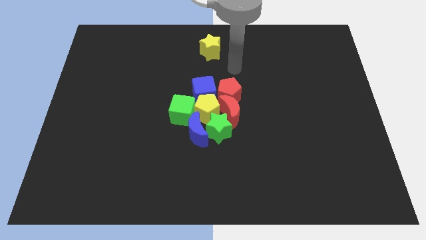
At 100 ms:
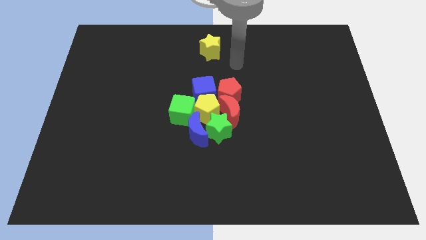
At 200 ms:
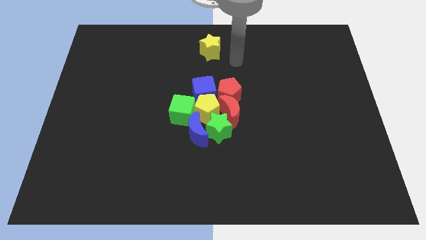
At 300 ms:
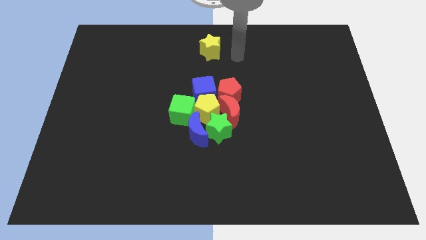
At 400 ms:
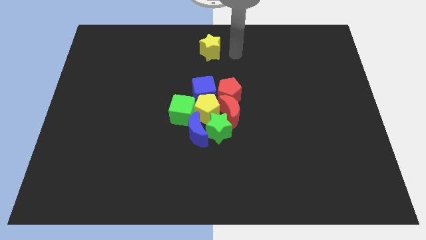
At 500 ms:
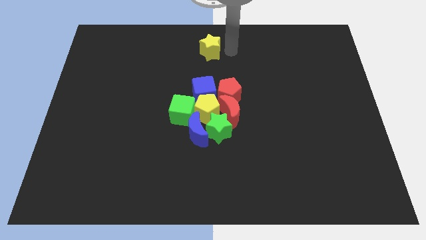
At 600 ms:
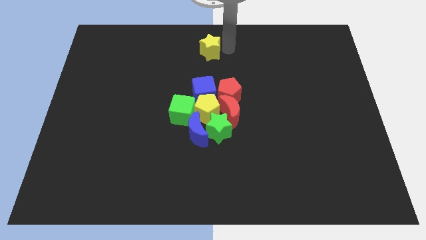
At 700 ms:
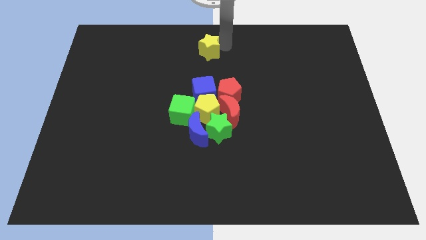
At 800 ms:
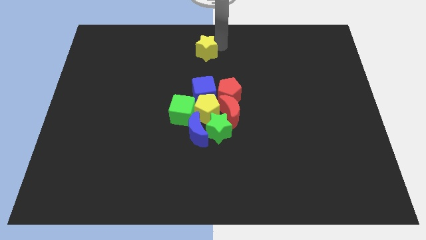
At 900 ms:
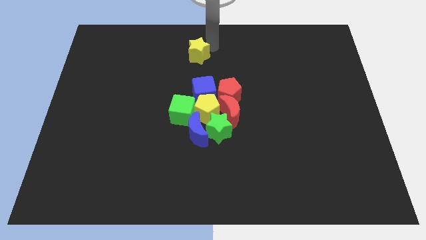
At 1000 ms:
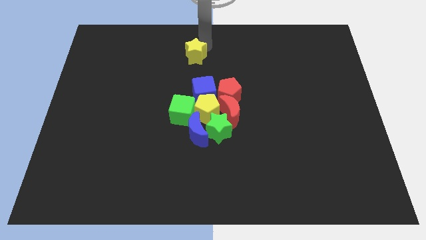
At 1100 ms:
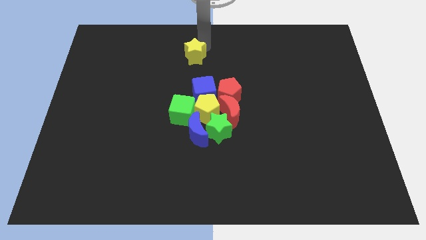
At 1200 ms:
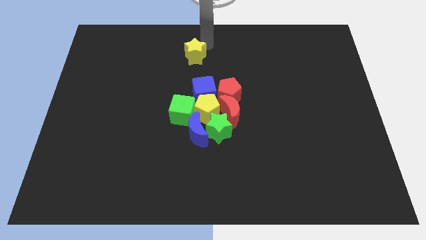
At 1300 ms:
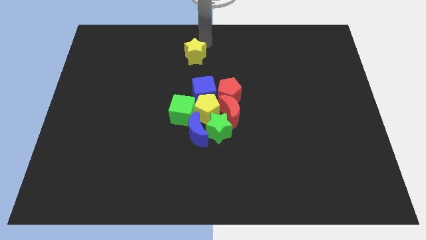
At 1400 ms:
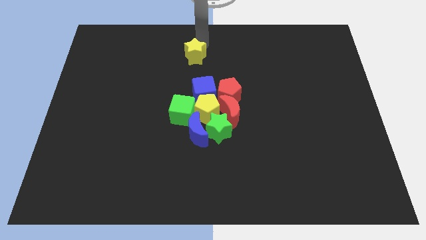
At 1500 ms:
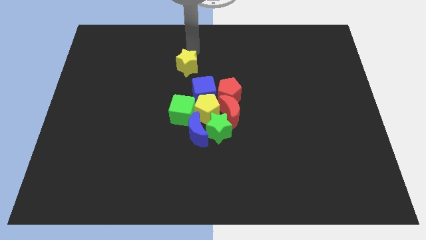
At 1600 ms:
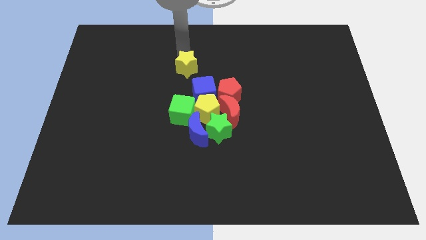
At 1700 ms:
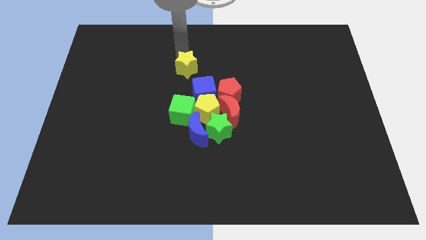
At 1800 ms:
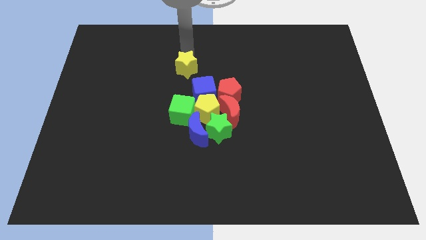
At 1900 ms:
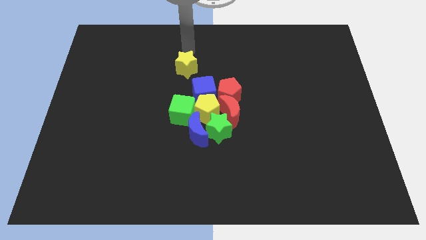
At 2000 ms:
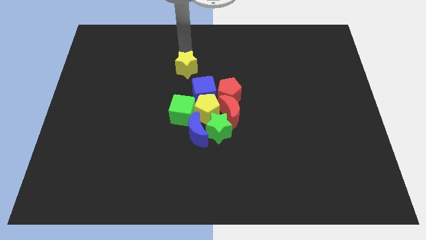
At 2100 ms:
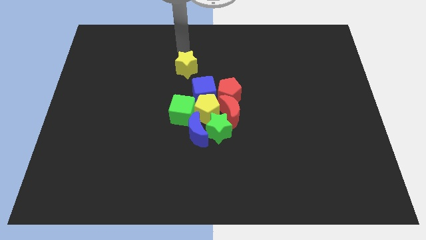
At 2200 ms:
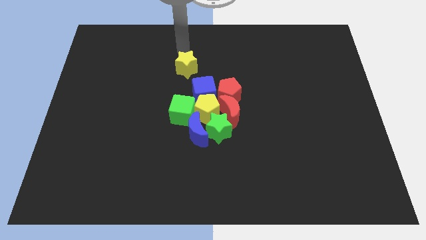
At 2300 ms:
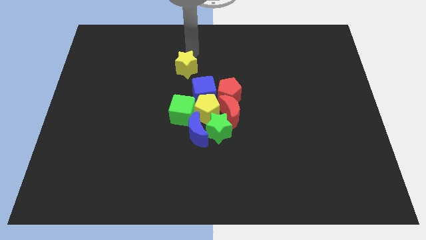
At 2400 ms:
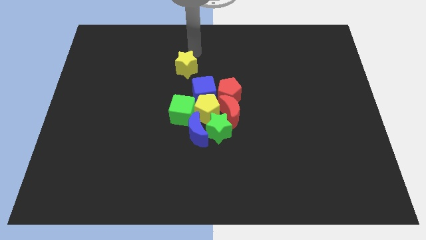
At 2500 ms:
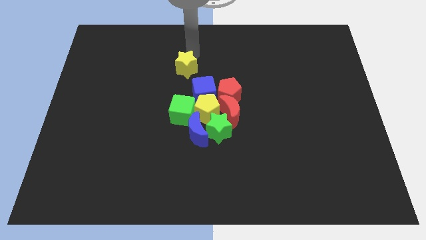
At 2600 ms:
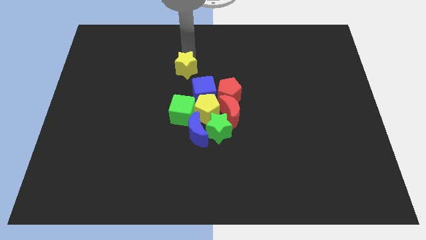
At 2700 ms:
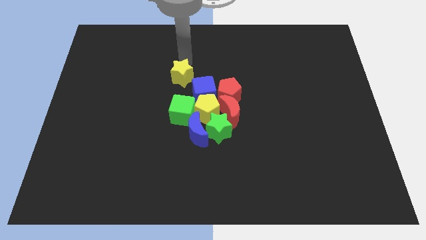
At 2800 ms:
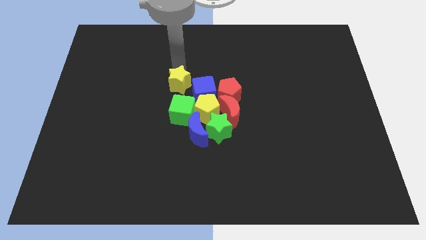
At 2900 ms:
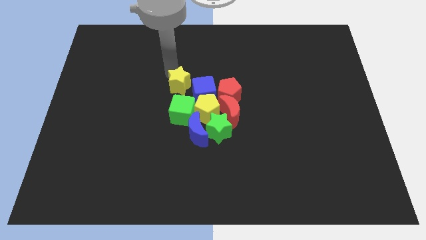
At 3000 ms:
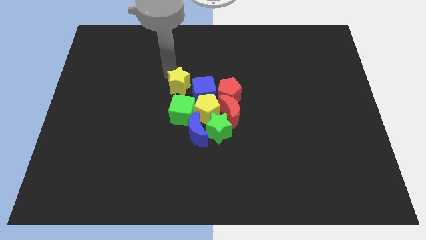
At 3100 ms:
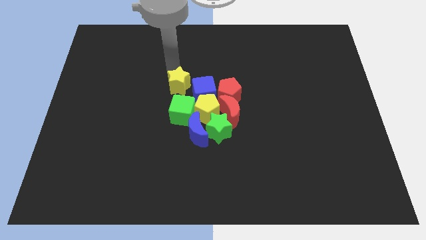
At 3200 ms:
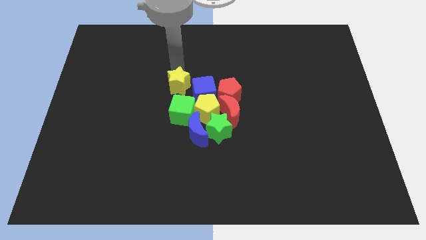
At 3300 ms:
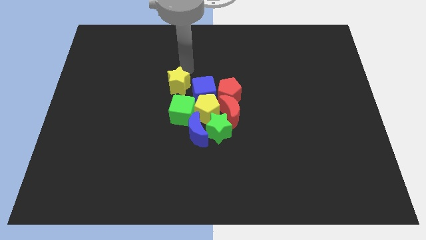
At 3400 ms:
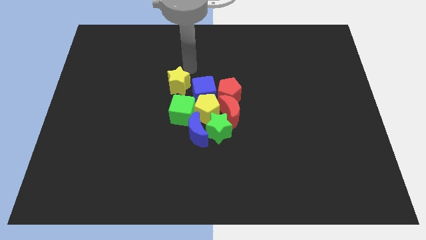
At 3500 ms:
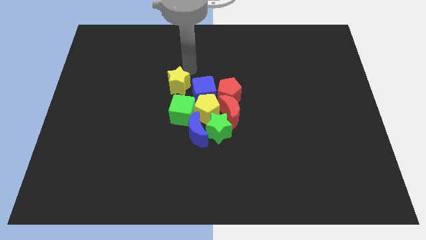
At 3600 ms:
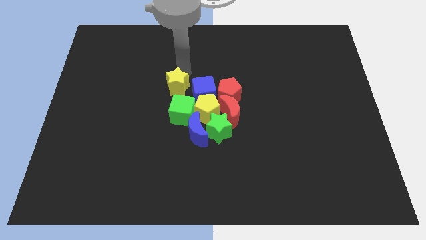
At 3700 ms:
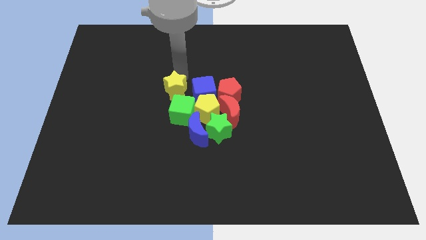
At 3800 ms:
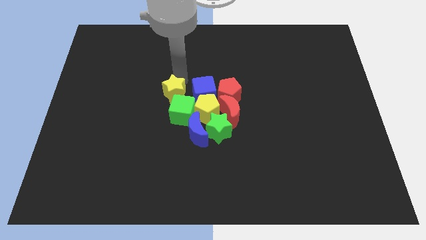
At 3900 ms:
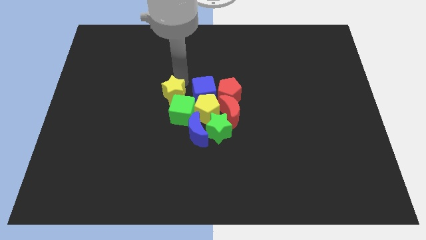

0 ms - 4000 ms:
push the yellow star to the left side of the blue cube

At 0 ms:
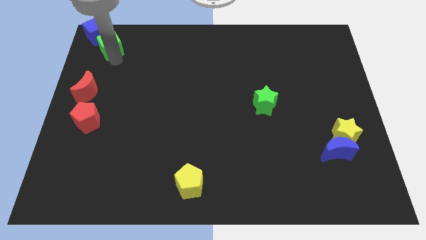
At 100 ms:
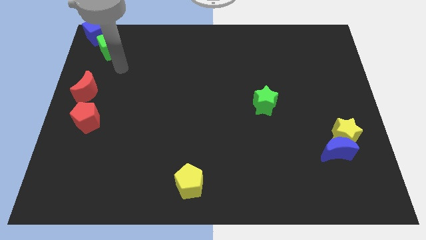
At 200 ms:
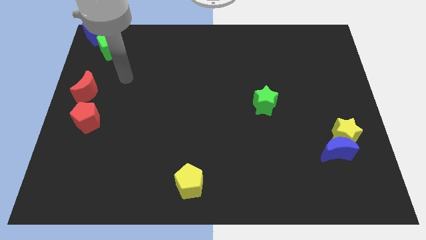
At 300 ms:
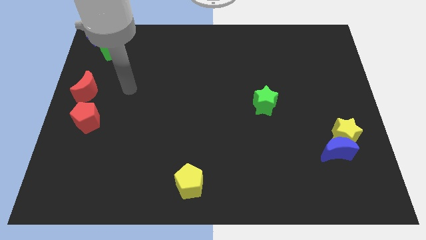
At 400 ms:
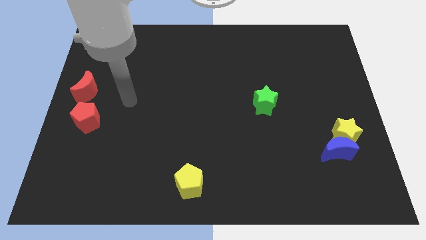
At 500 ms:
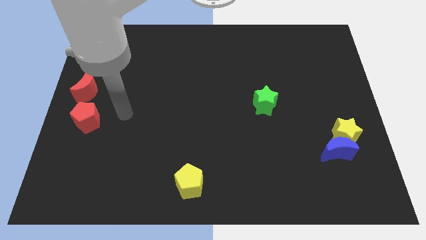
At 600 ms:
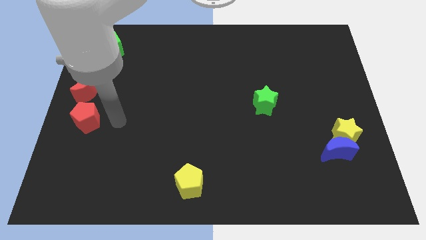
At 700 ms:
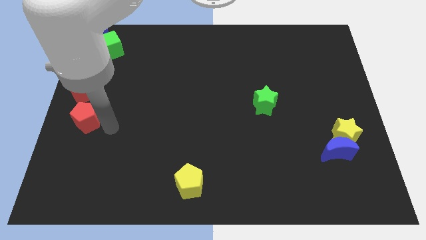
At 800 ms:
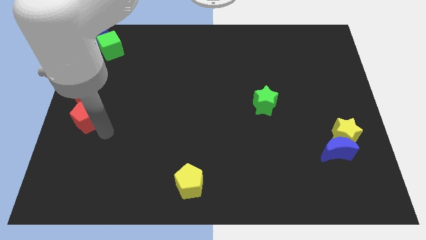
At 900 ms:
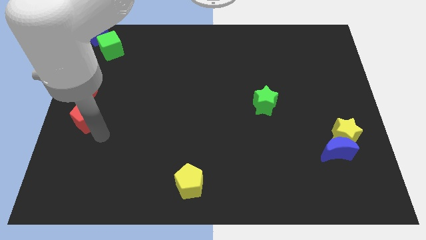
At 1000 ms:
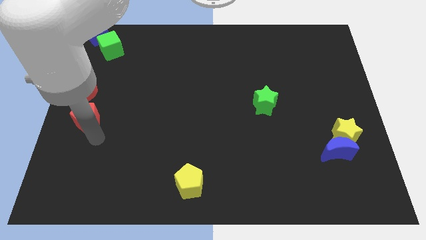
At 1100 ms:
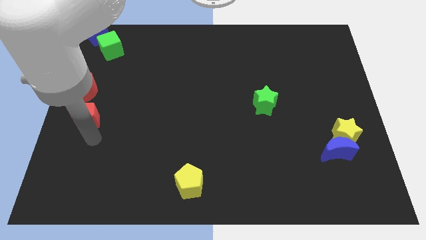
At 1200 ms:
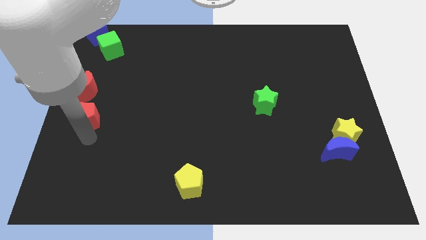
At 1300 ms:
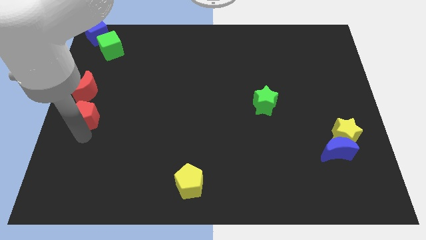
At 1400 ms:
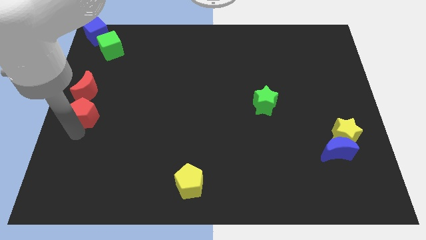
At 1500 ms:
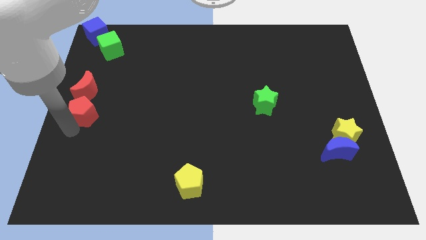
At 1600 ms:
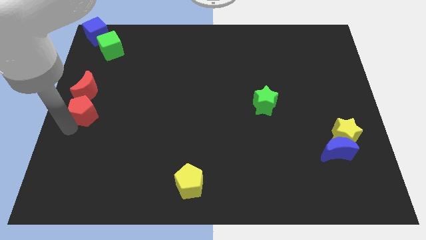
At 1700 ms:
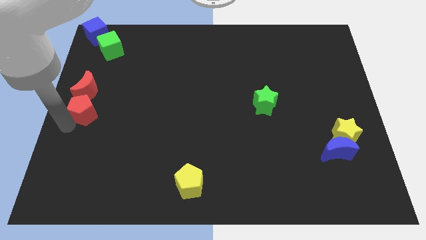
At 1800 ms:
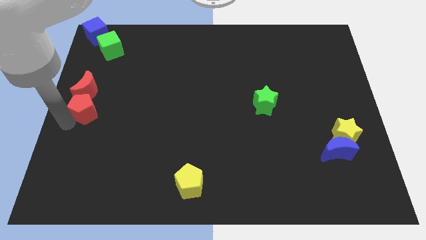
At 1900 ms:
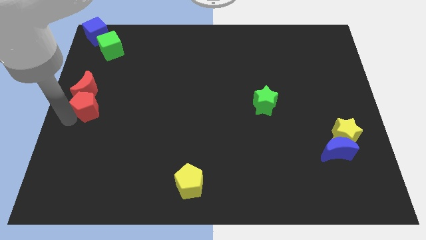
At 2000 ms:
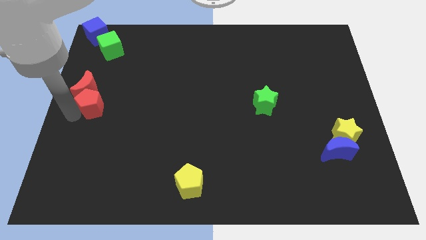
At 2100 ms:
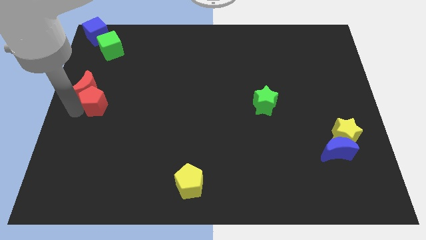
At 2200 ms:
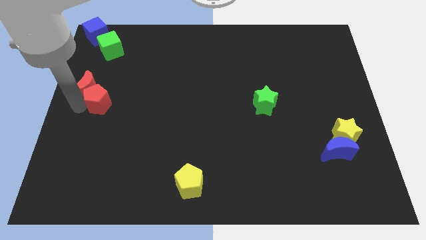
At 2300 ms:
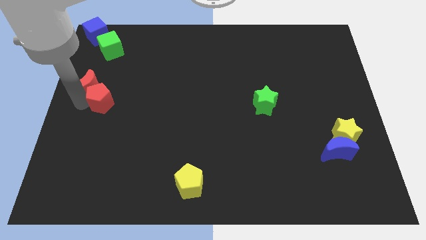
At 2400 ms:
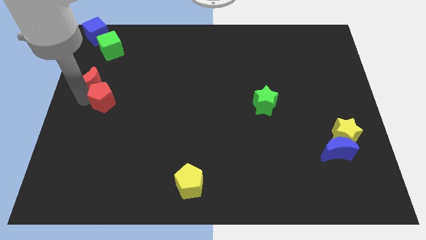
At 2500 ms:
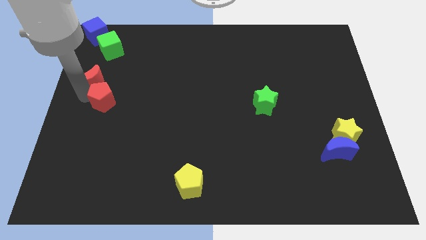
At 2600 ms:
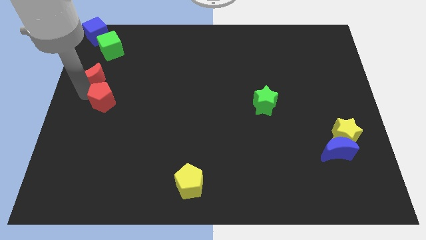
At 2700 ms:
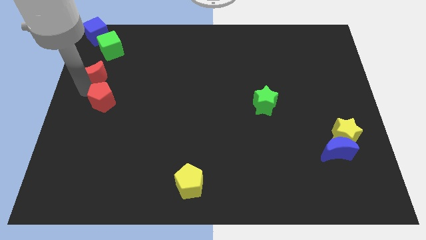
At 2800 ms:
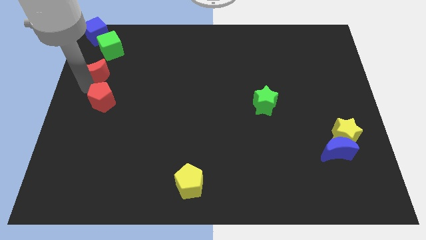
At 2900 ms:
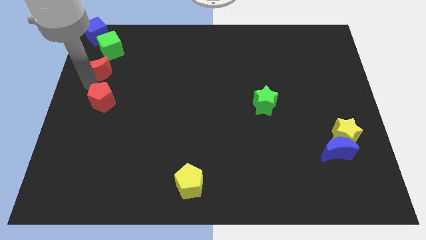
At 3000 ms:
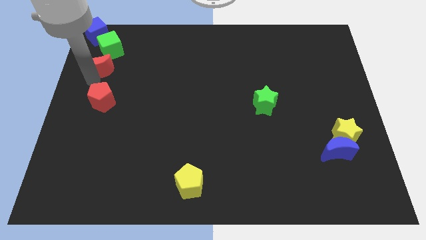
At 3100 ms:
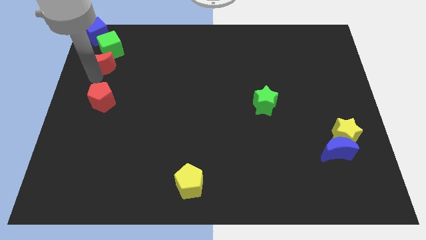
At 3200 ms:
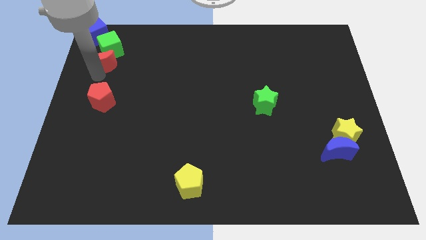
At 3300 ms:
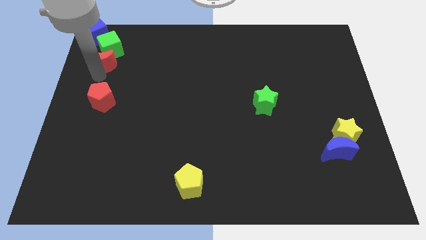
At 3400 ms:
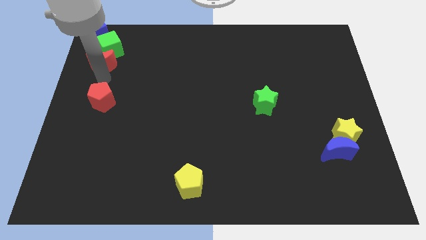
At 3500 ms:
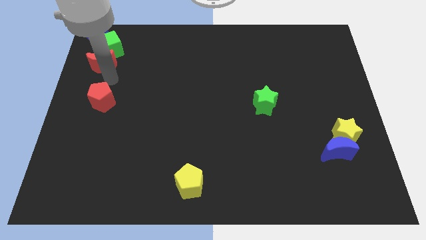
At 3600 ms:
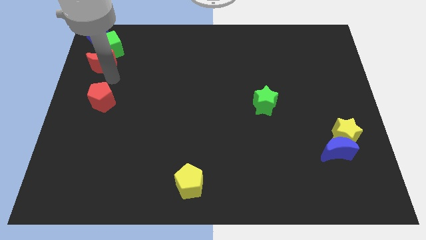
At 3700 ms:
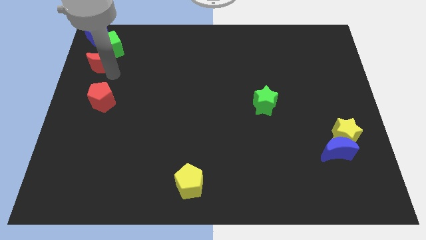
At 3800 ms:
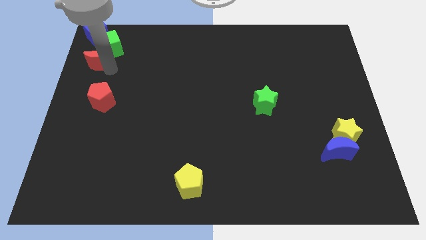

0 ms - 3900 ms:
slide the red crescent into the bottom side of the green cube

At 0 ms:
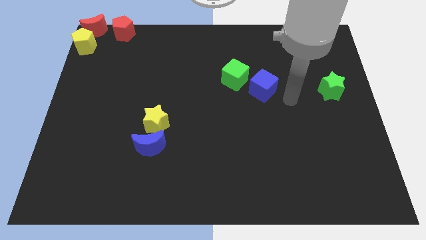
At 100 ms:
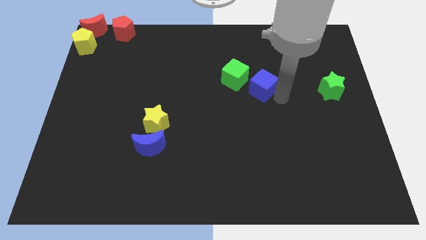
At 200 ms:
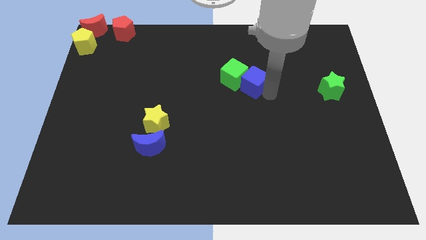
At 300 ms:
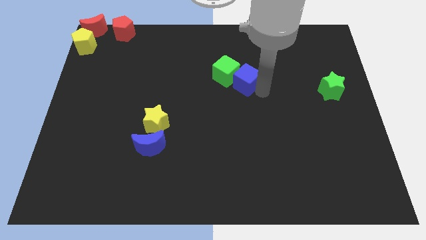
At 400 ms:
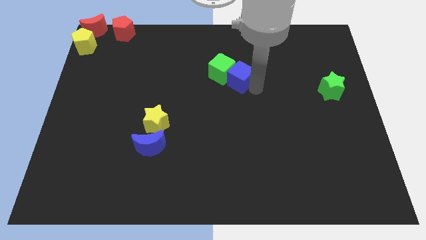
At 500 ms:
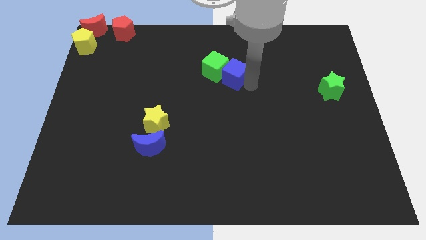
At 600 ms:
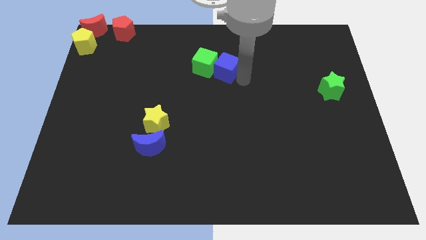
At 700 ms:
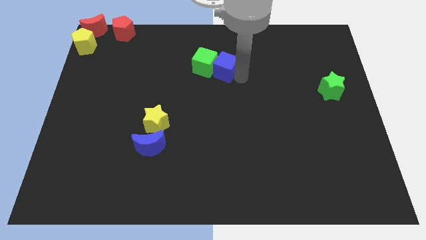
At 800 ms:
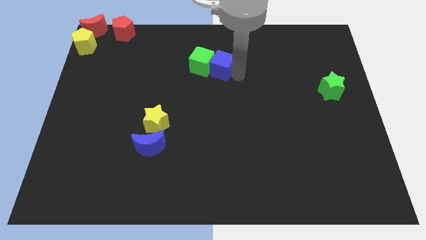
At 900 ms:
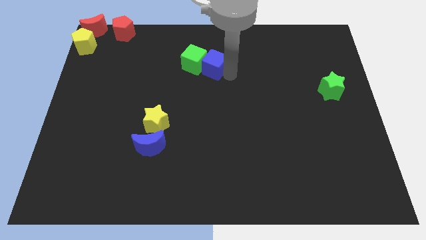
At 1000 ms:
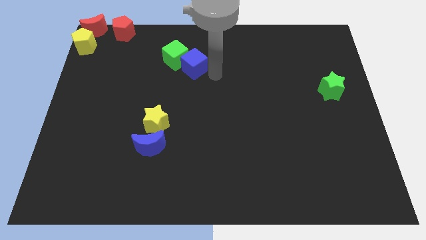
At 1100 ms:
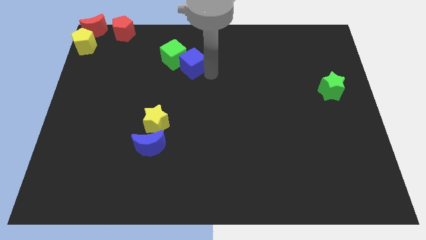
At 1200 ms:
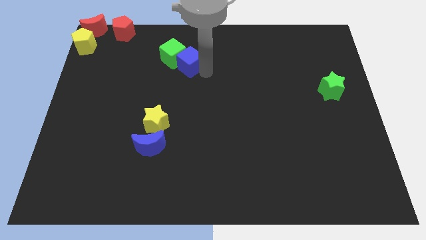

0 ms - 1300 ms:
push the blue cube along with green cube towards the red pentagon
